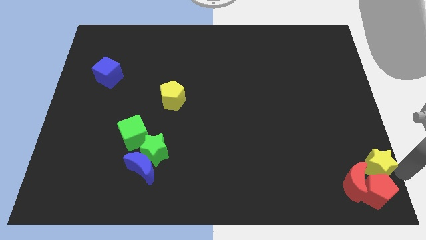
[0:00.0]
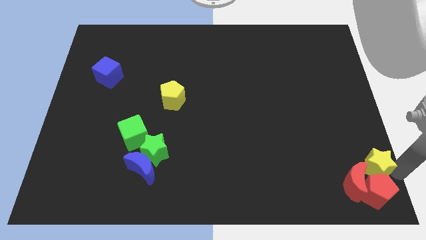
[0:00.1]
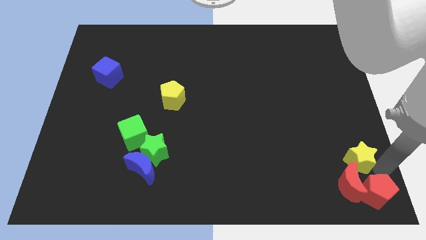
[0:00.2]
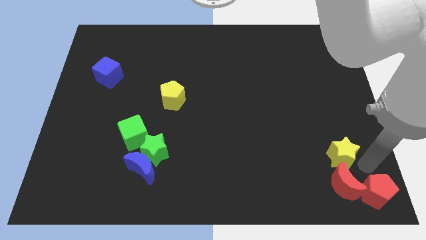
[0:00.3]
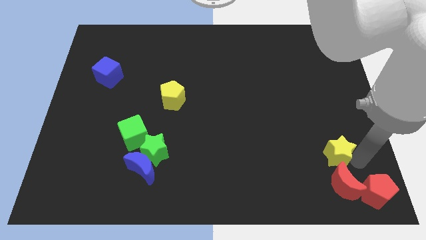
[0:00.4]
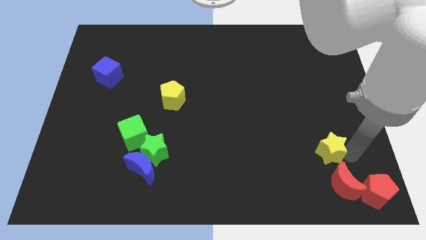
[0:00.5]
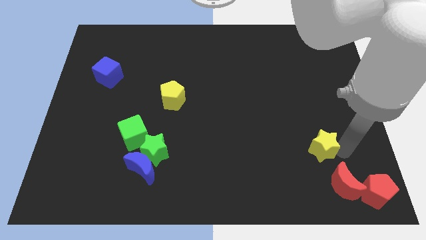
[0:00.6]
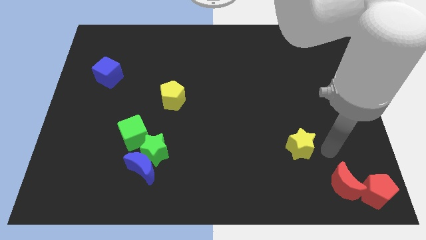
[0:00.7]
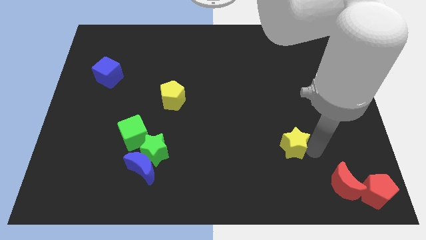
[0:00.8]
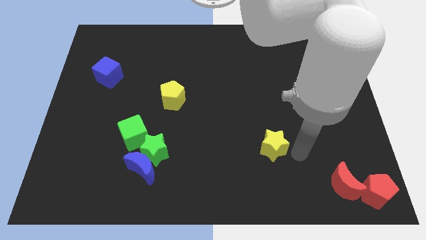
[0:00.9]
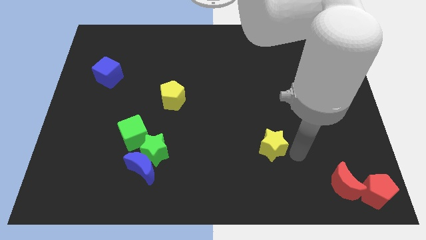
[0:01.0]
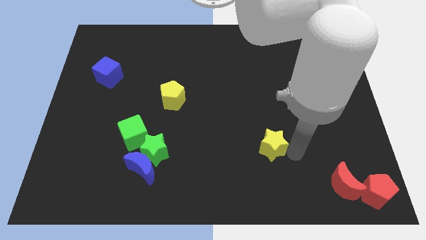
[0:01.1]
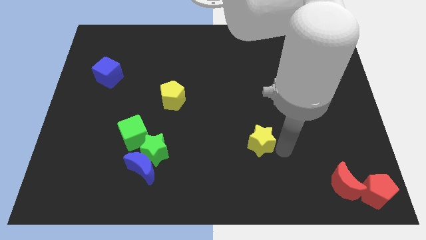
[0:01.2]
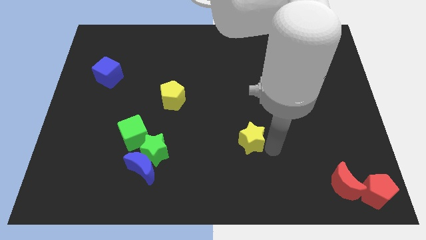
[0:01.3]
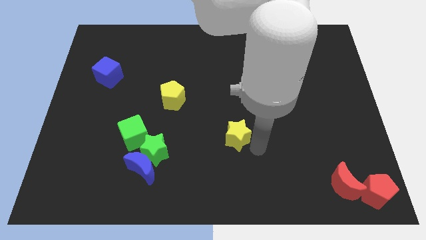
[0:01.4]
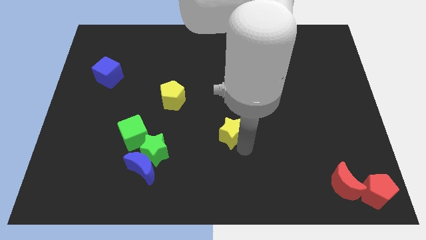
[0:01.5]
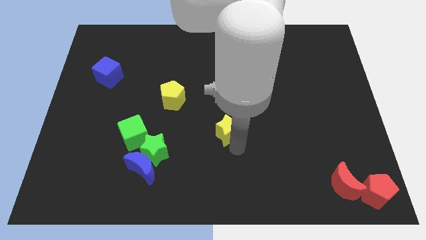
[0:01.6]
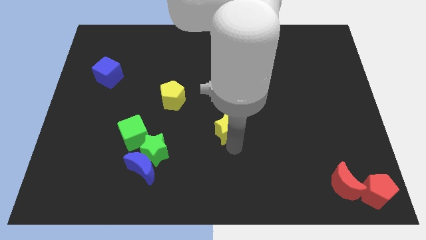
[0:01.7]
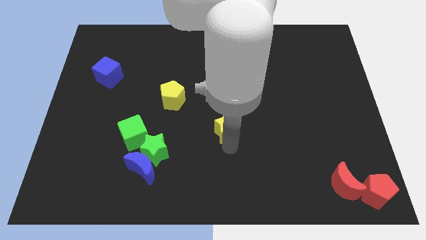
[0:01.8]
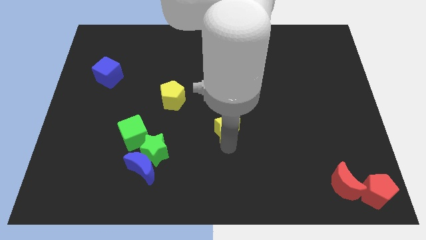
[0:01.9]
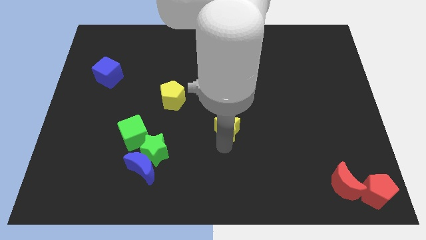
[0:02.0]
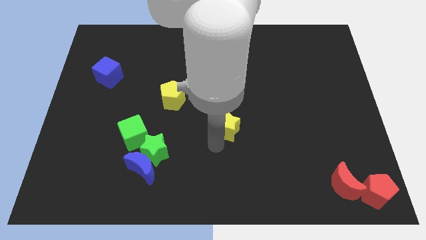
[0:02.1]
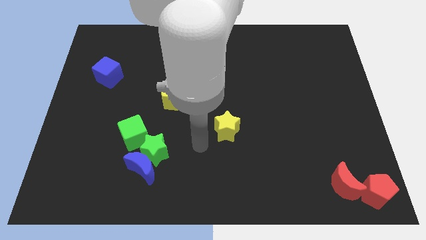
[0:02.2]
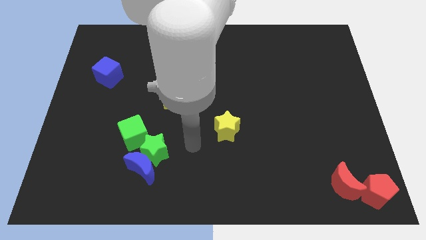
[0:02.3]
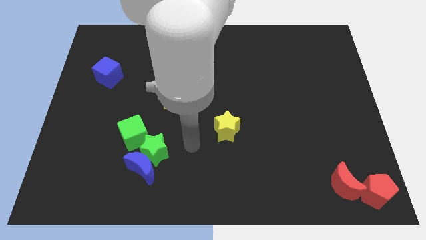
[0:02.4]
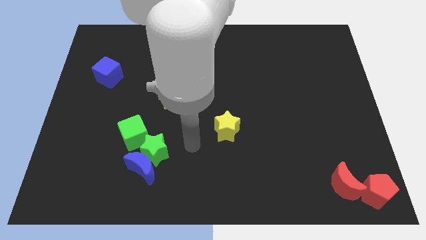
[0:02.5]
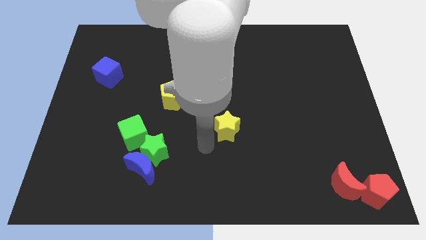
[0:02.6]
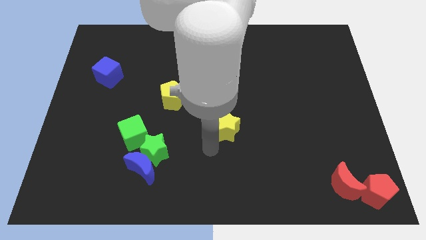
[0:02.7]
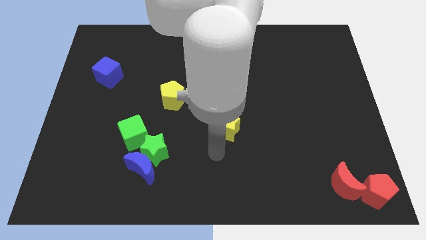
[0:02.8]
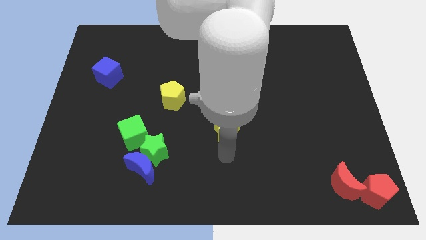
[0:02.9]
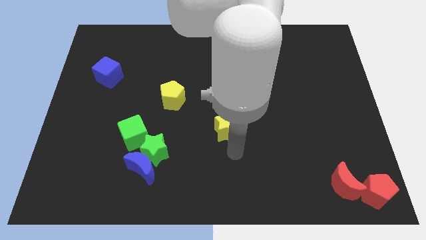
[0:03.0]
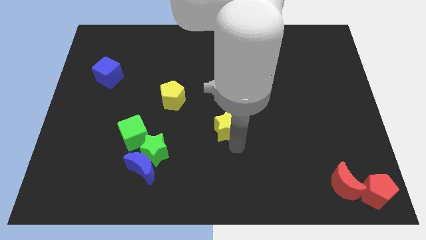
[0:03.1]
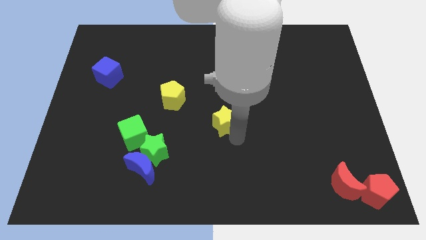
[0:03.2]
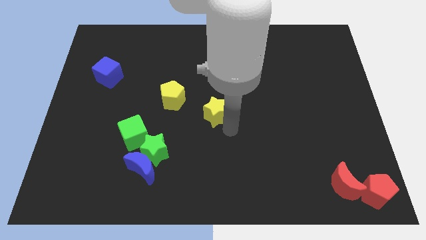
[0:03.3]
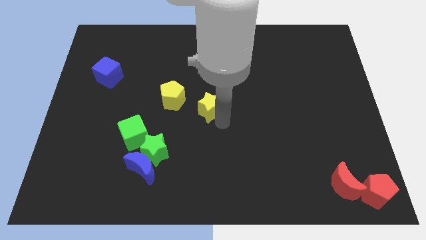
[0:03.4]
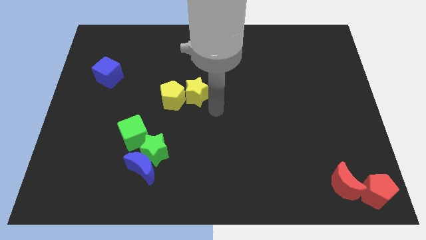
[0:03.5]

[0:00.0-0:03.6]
push the yellow star to the right side of the yellow pentagon

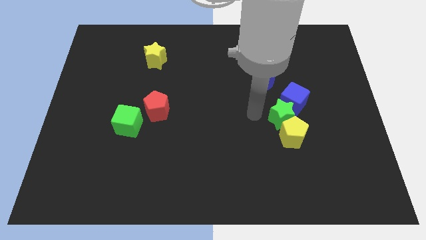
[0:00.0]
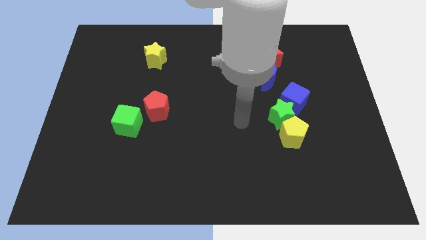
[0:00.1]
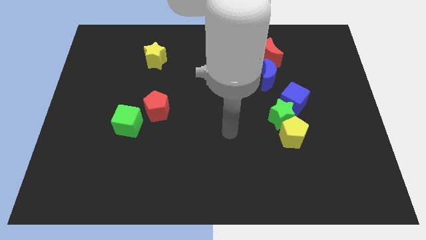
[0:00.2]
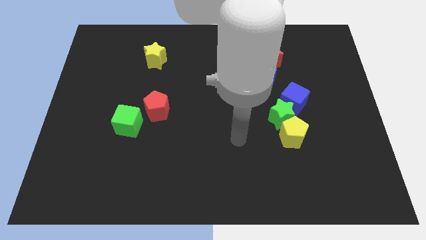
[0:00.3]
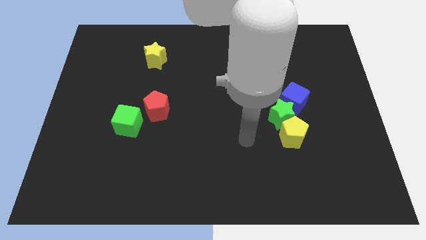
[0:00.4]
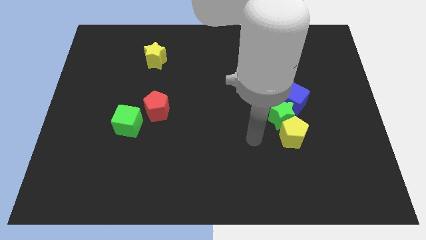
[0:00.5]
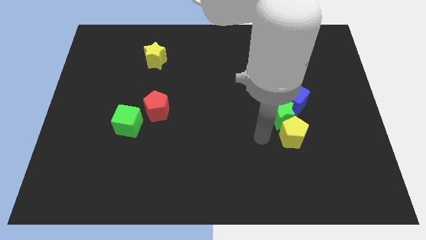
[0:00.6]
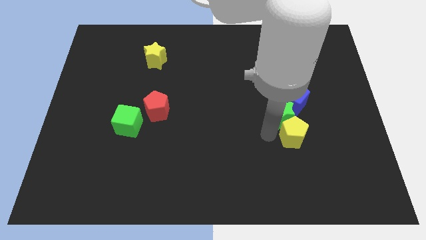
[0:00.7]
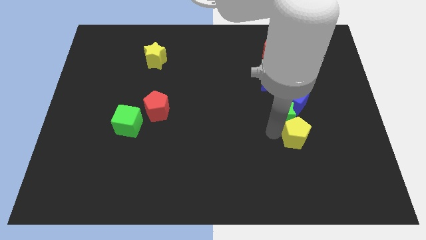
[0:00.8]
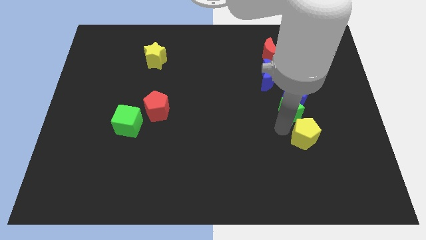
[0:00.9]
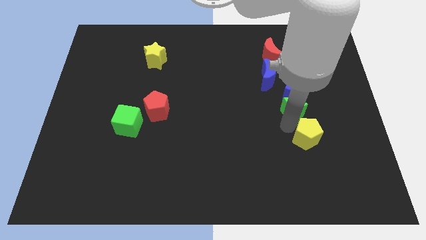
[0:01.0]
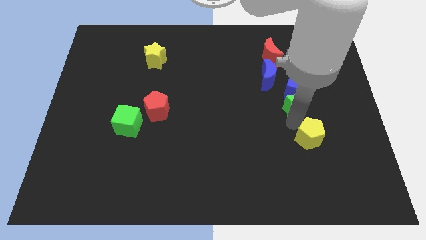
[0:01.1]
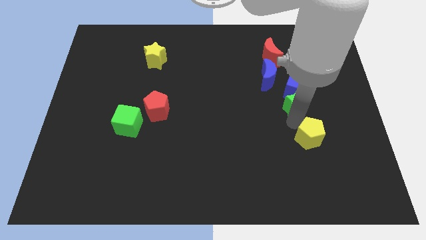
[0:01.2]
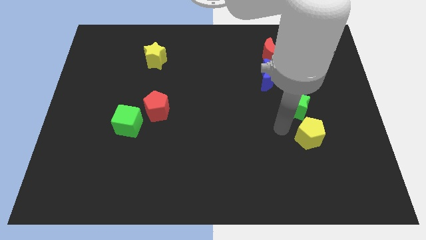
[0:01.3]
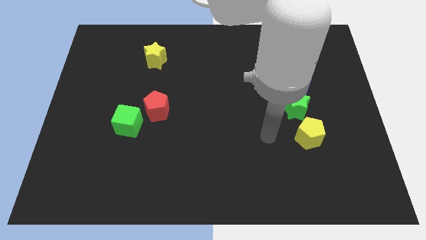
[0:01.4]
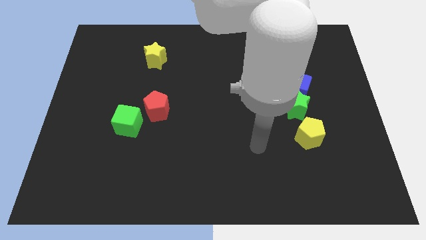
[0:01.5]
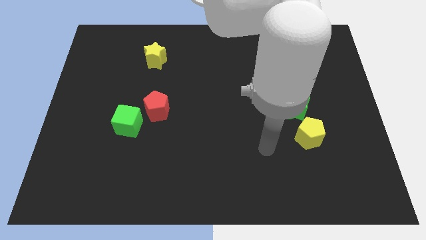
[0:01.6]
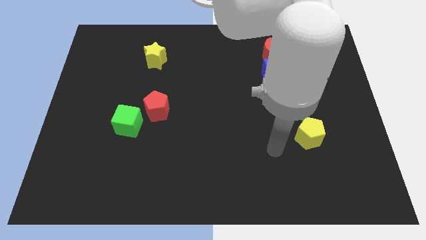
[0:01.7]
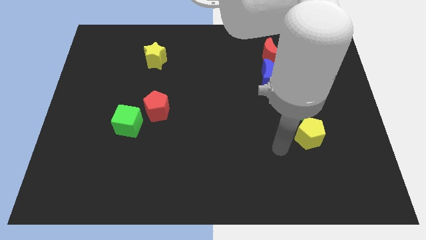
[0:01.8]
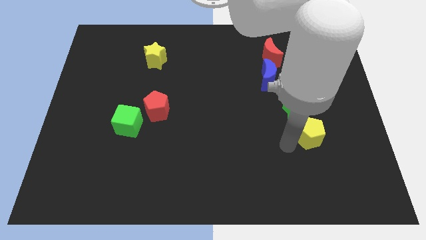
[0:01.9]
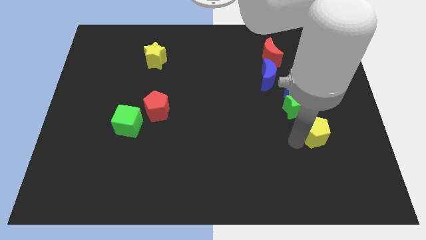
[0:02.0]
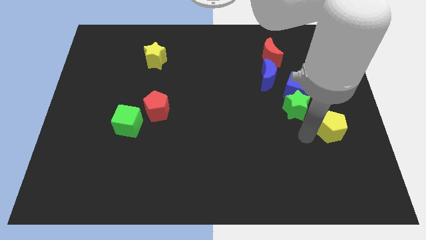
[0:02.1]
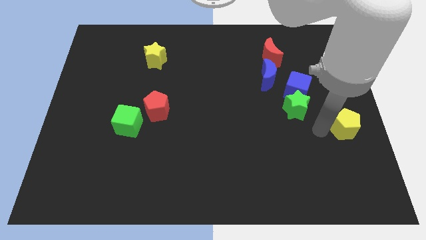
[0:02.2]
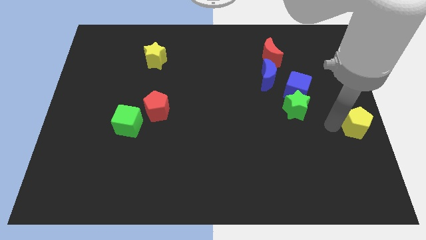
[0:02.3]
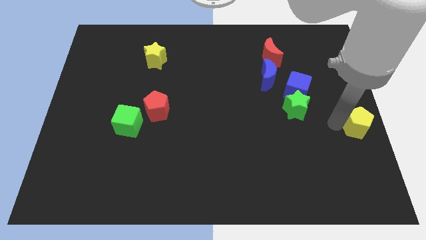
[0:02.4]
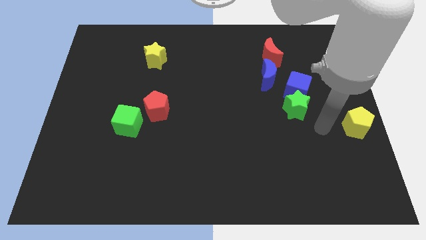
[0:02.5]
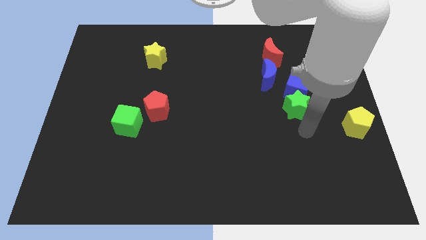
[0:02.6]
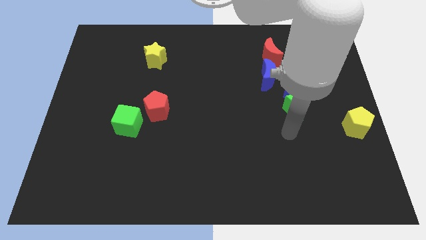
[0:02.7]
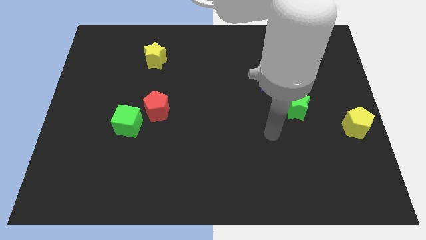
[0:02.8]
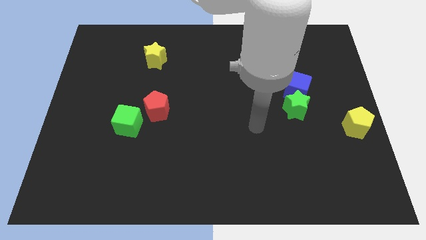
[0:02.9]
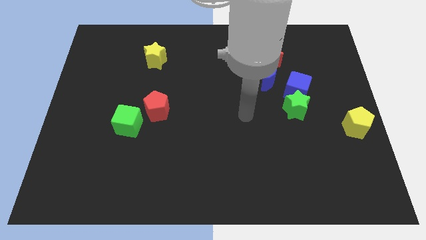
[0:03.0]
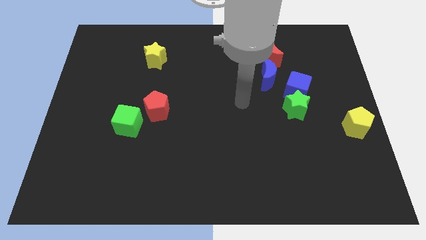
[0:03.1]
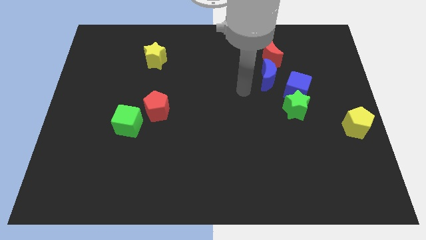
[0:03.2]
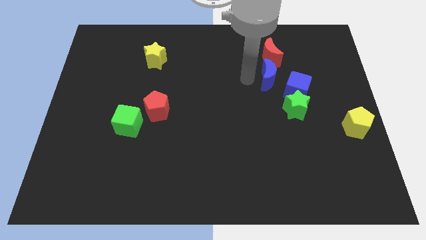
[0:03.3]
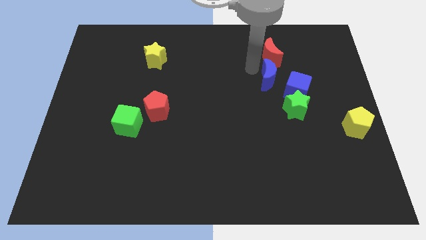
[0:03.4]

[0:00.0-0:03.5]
move your arm away from the yellow pentagon

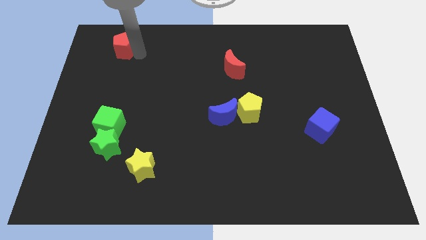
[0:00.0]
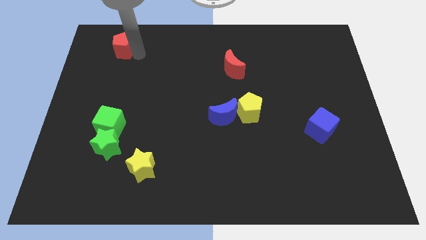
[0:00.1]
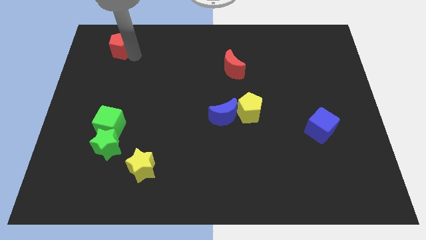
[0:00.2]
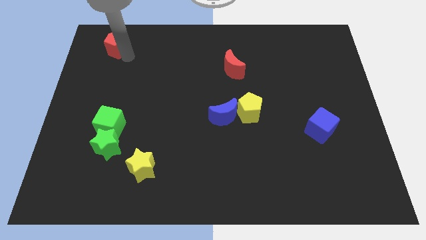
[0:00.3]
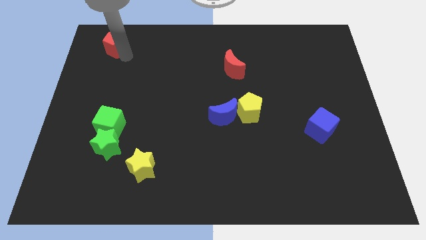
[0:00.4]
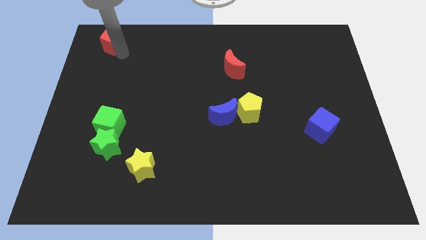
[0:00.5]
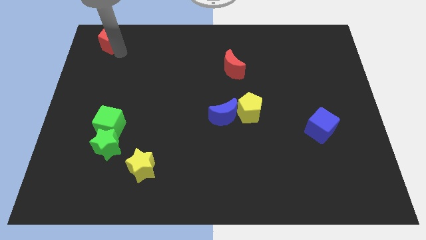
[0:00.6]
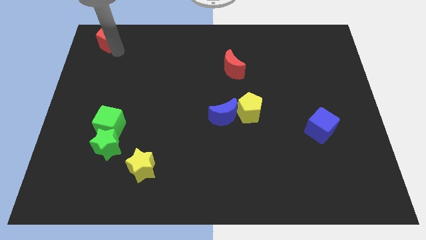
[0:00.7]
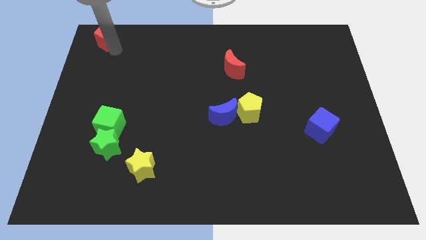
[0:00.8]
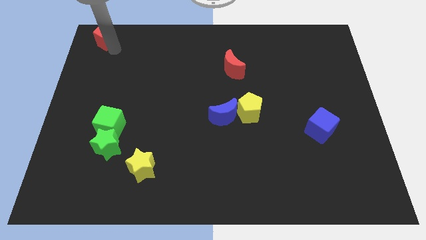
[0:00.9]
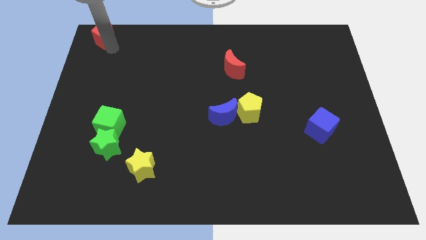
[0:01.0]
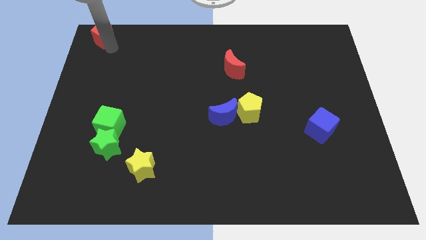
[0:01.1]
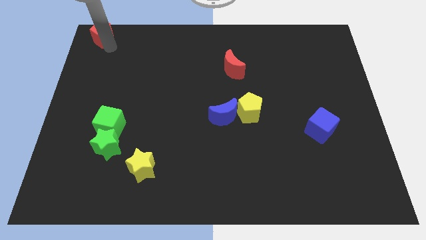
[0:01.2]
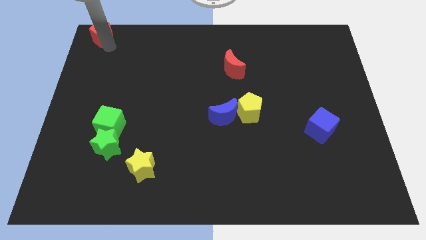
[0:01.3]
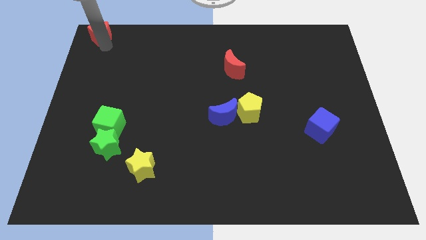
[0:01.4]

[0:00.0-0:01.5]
push the red pentagon to the top left corner of the board

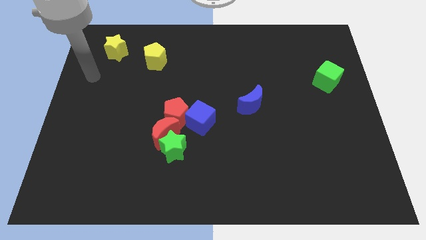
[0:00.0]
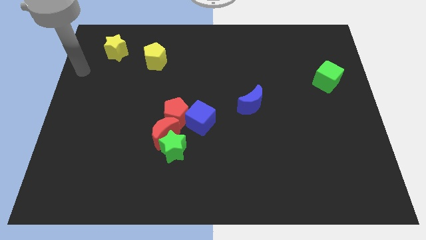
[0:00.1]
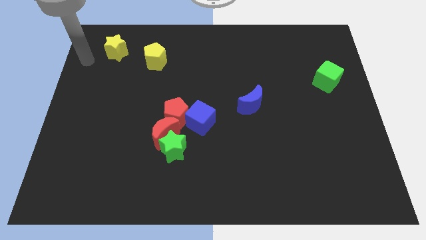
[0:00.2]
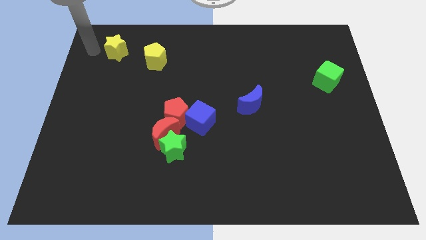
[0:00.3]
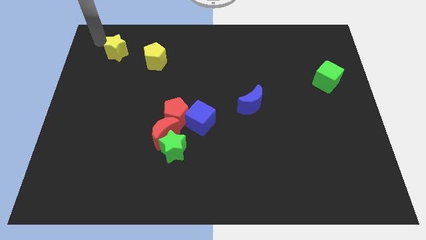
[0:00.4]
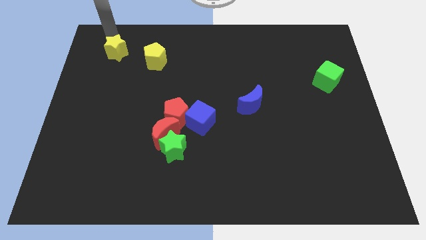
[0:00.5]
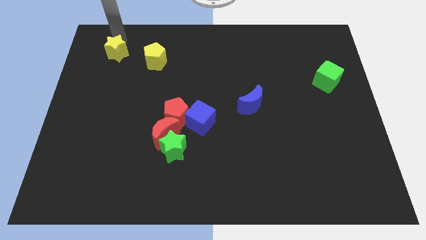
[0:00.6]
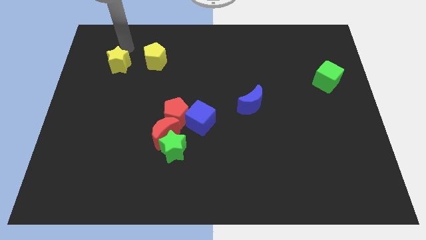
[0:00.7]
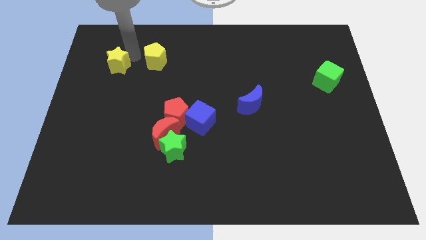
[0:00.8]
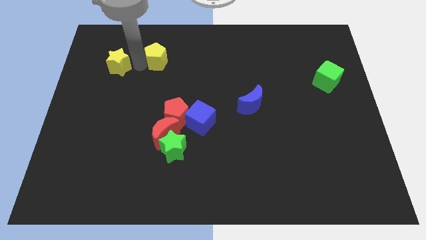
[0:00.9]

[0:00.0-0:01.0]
place arm in between yellow blocks
